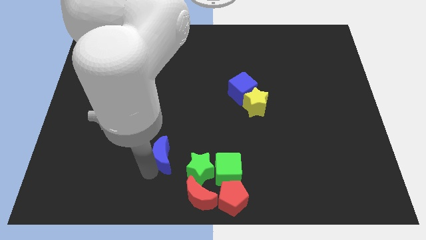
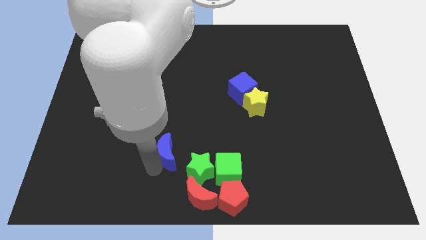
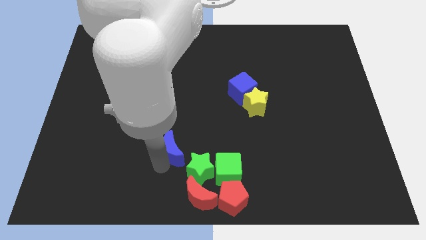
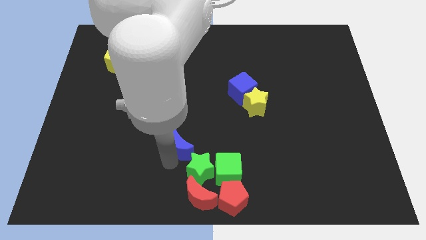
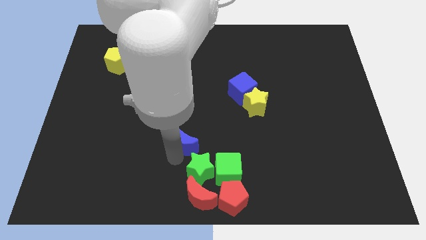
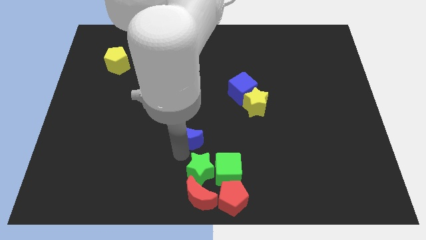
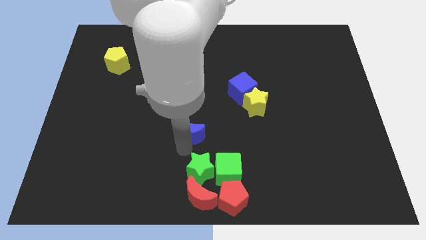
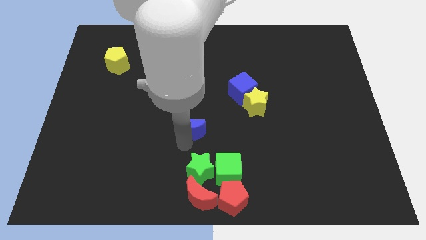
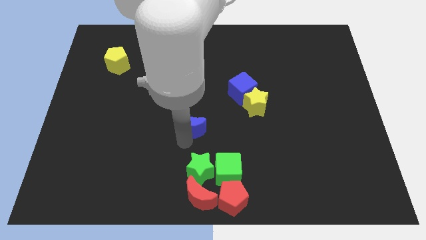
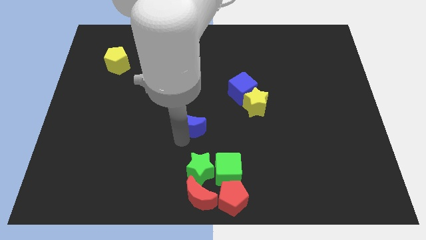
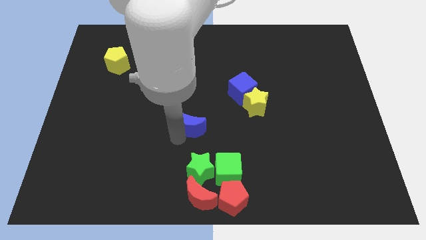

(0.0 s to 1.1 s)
move the blue crescent above the green star

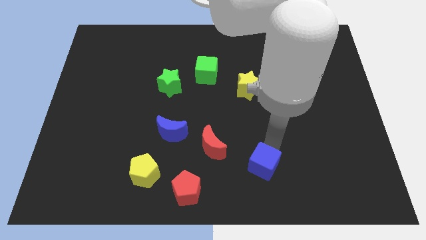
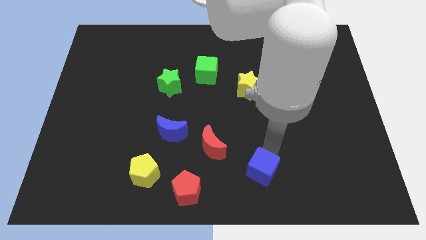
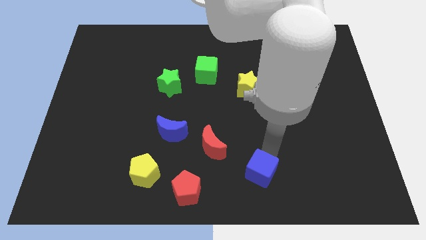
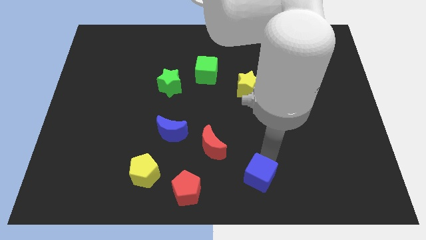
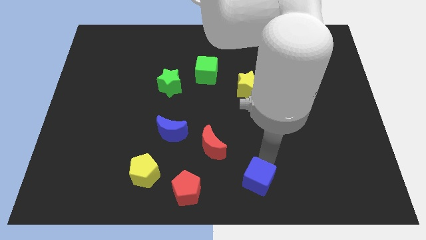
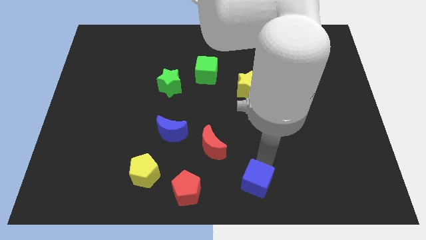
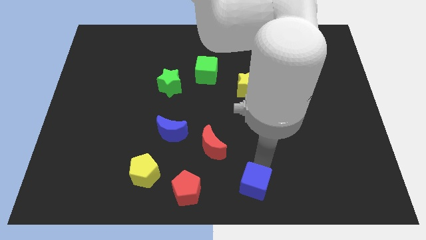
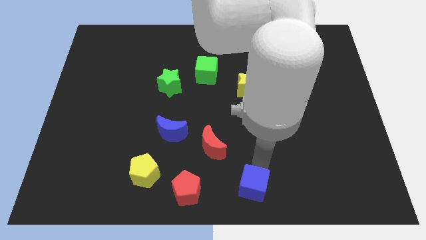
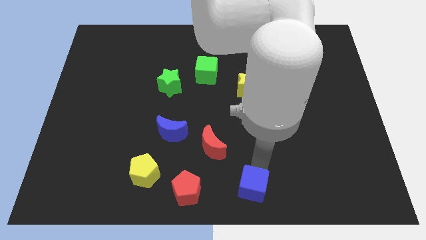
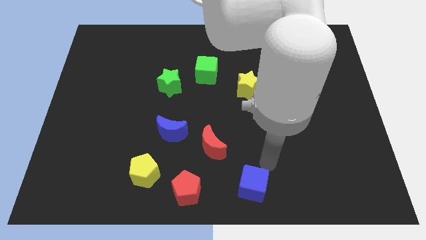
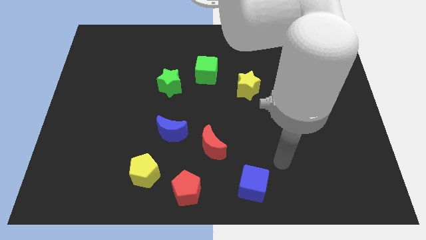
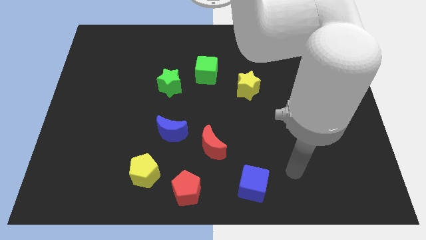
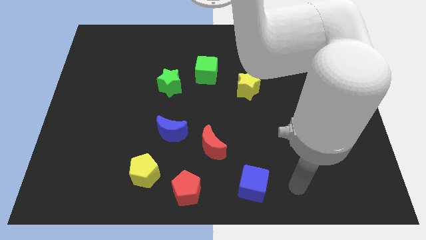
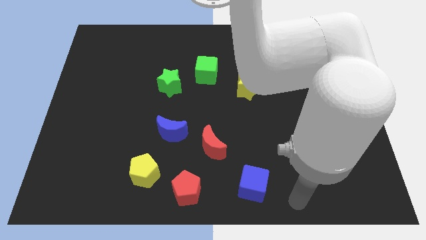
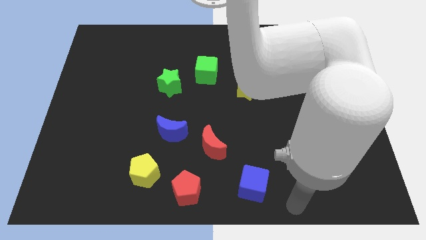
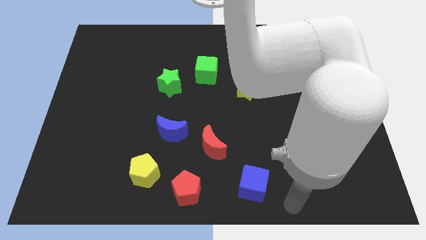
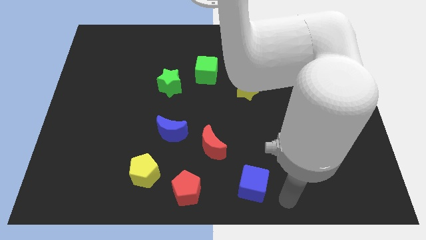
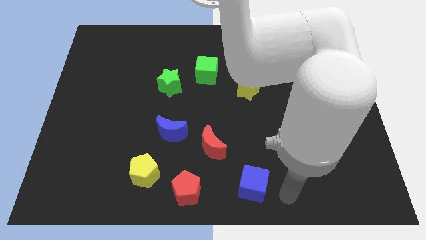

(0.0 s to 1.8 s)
move the blue cube to the right of the red pentagon

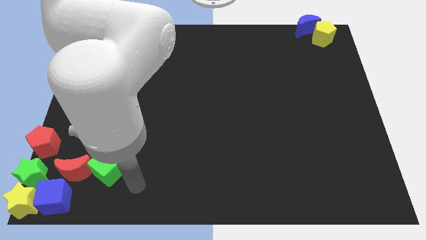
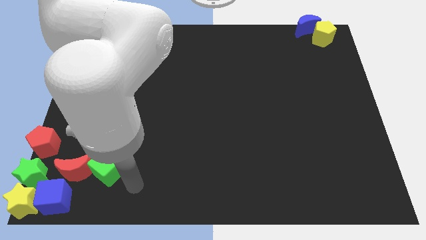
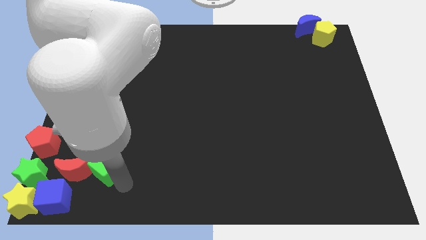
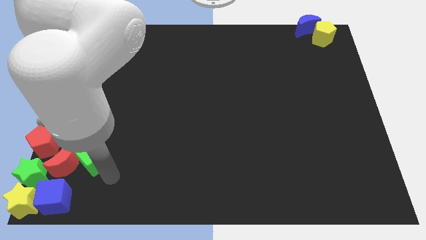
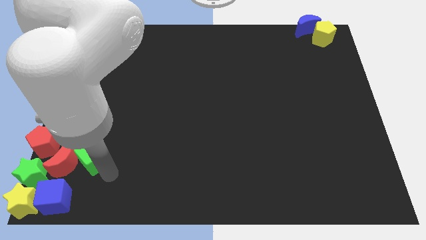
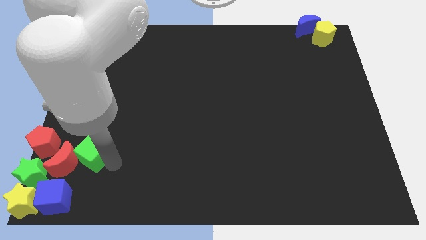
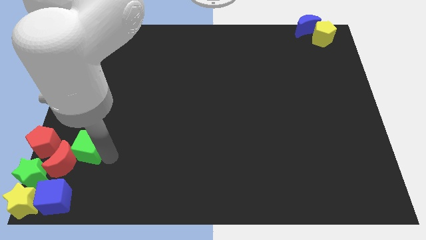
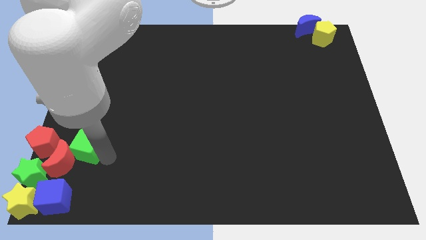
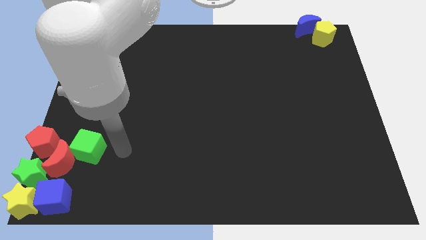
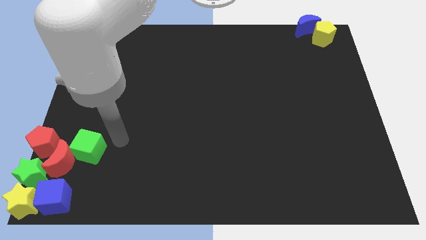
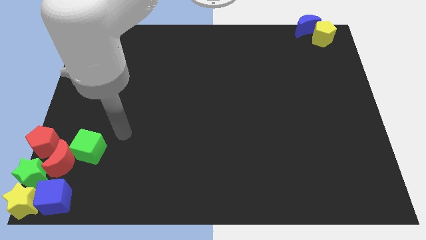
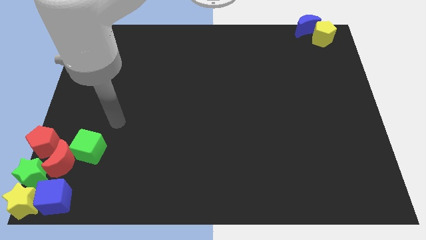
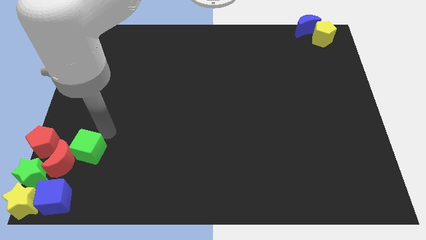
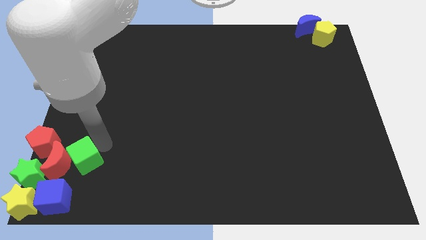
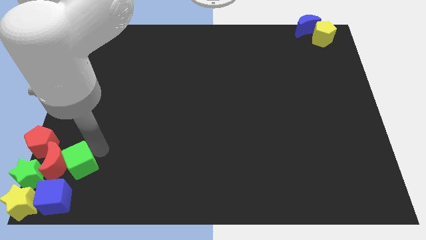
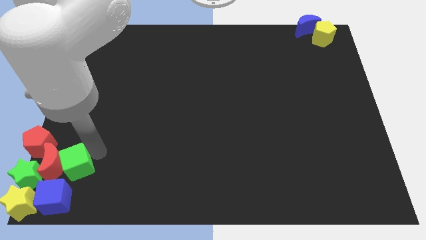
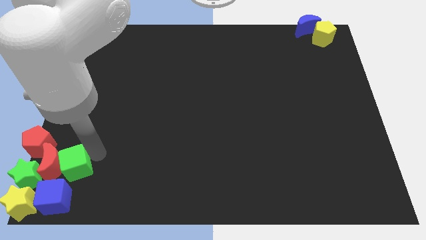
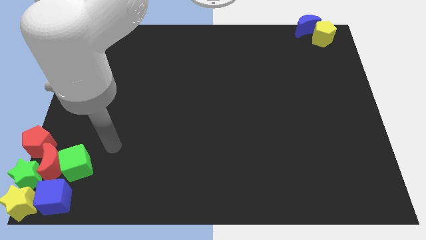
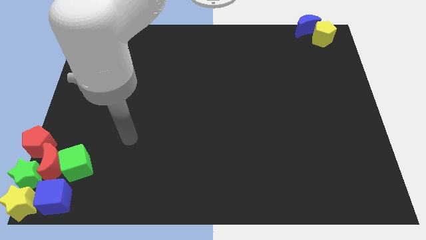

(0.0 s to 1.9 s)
push the green cube and red crescent into the green star

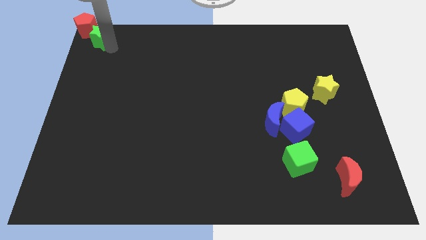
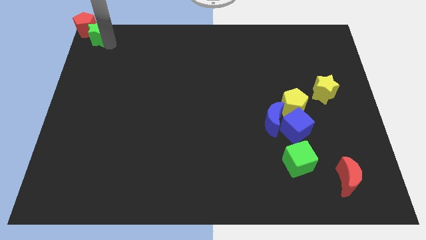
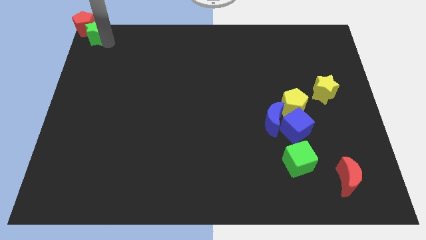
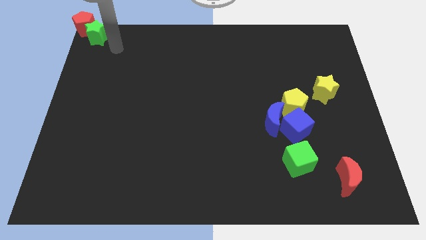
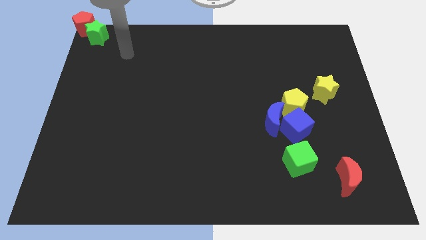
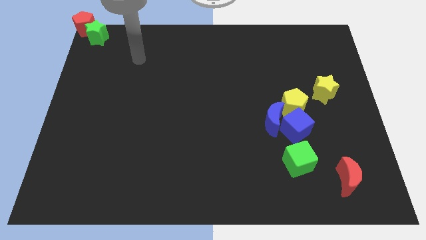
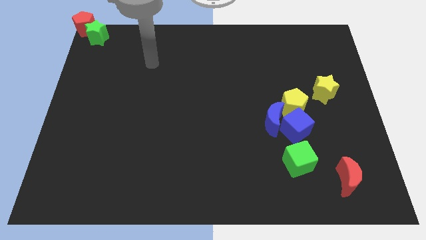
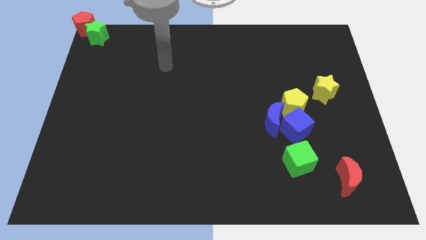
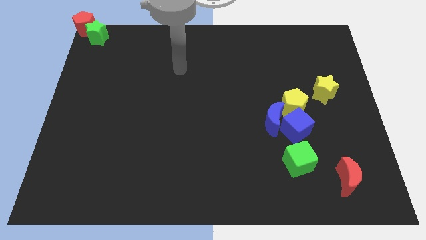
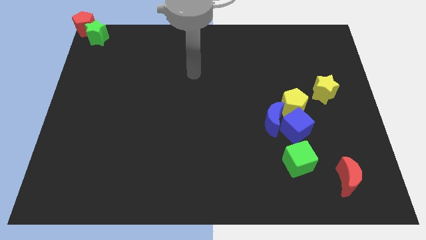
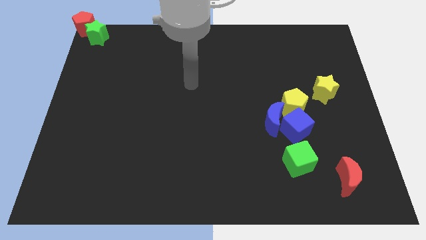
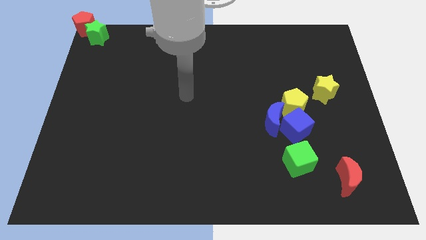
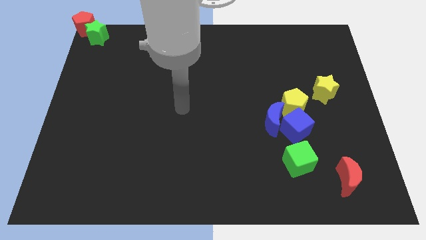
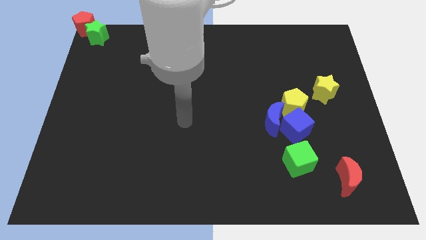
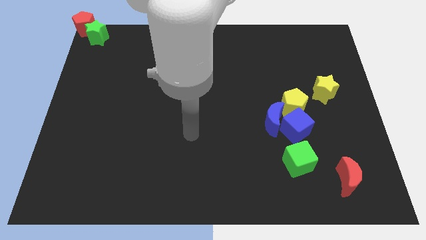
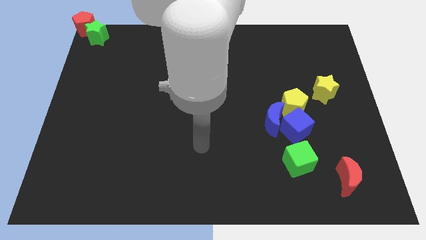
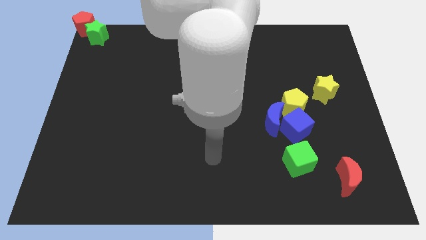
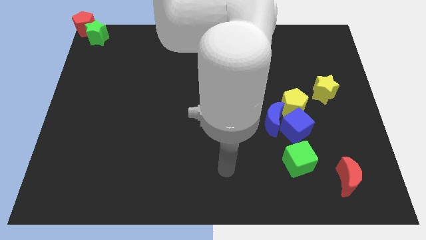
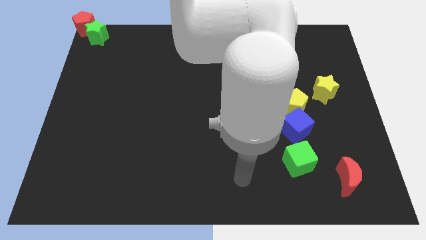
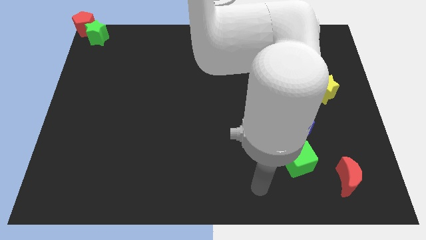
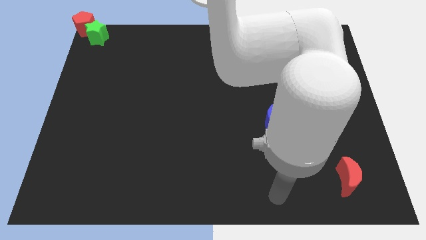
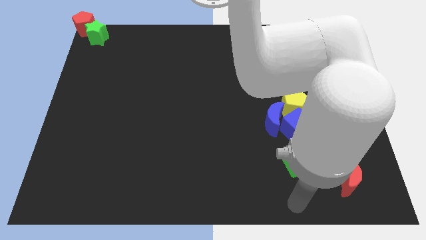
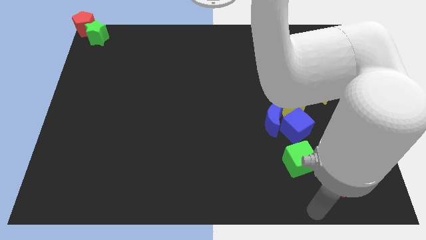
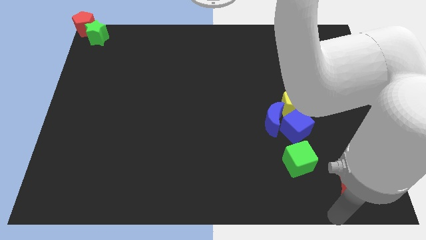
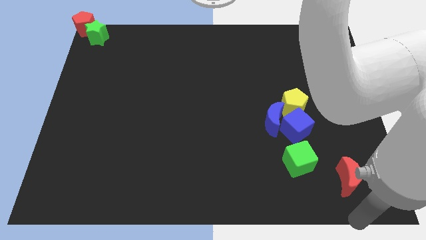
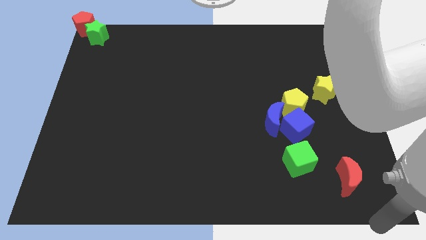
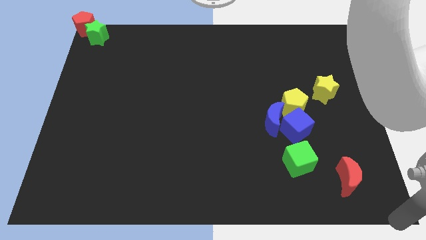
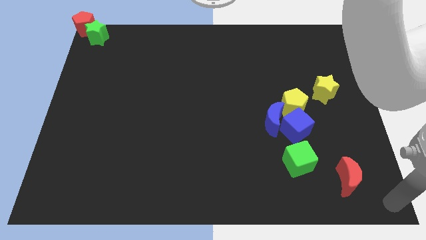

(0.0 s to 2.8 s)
move arm away from green star

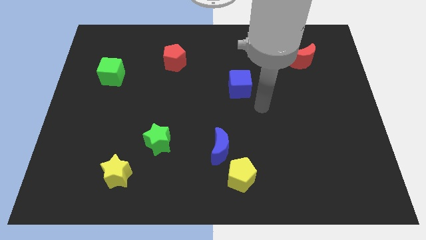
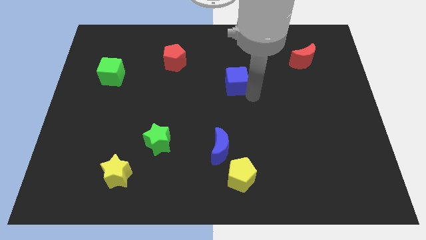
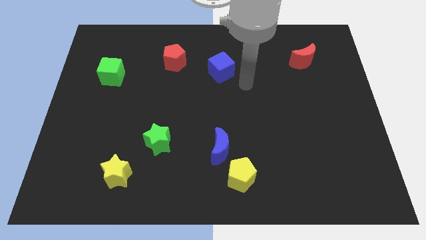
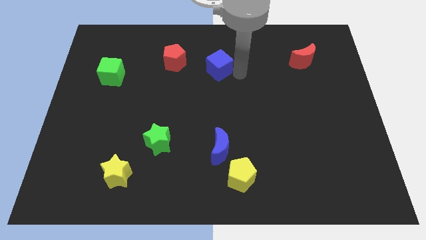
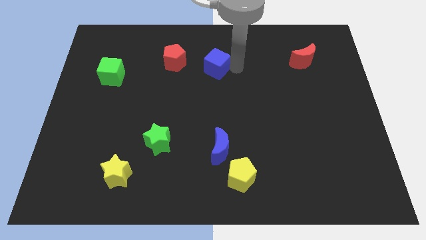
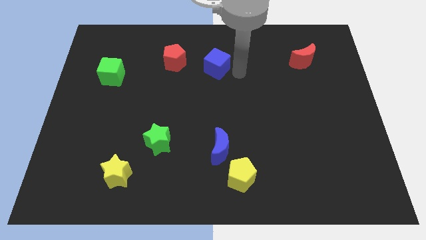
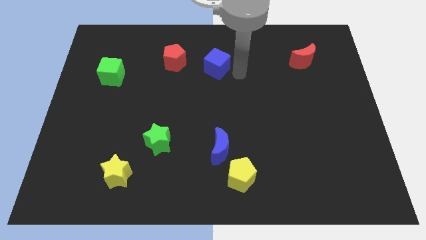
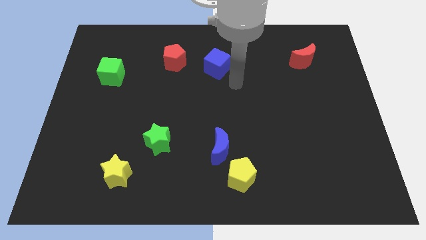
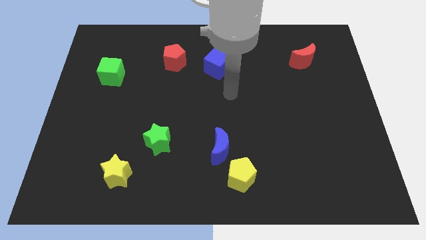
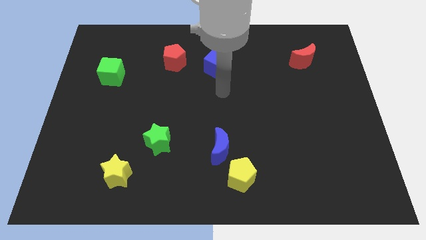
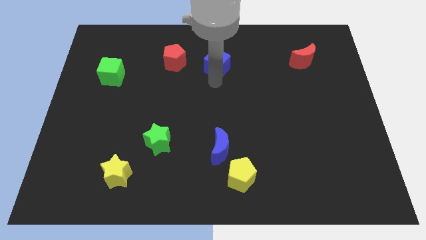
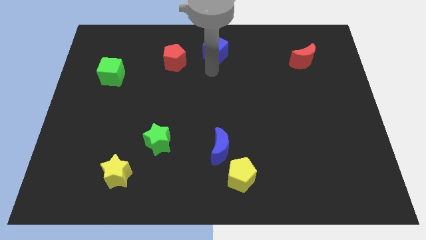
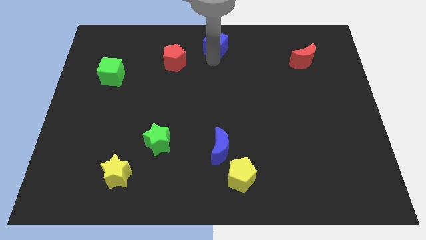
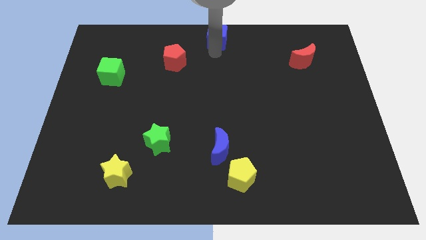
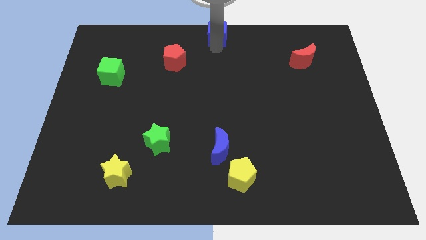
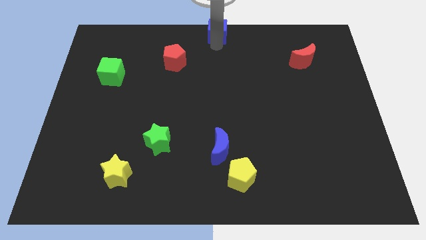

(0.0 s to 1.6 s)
move the blue cube towards the top center of the board
